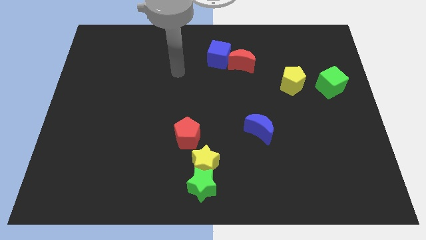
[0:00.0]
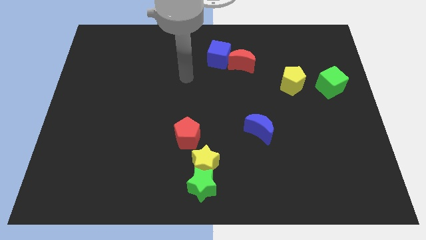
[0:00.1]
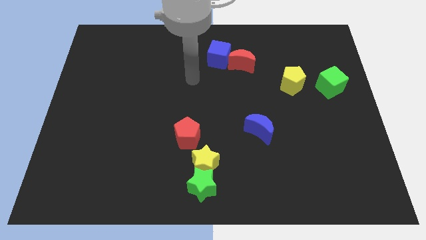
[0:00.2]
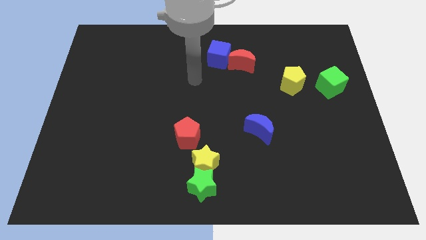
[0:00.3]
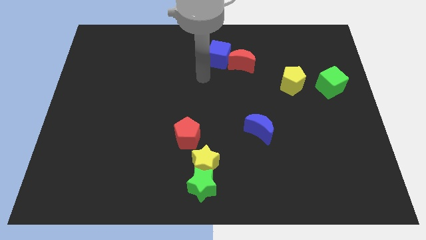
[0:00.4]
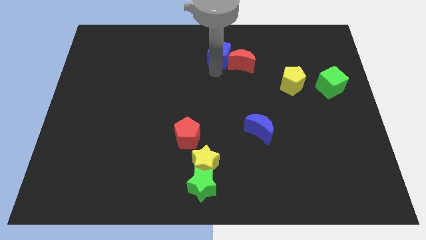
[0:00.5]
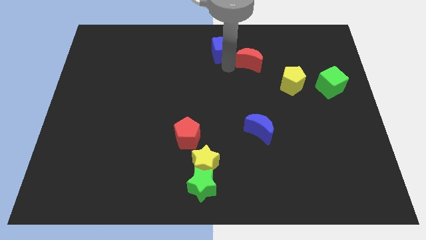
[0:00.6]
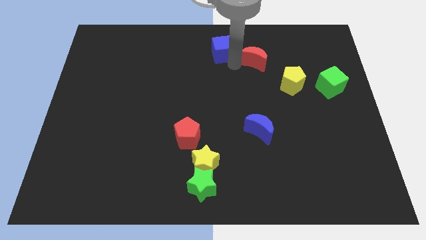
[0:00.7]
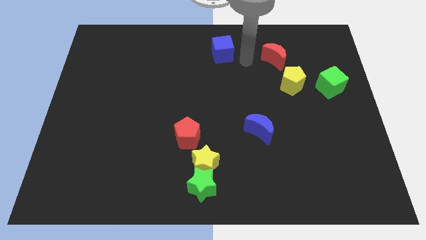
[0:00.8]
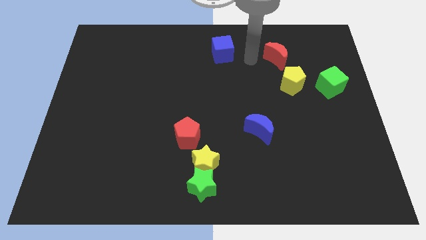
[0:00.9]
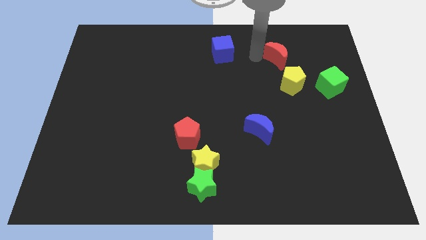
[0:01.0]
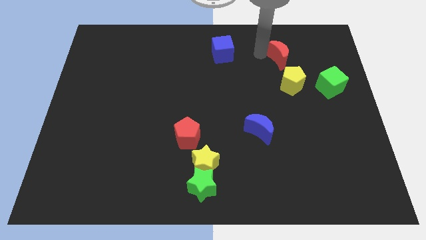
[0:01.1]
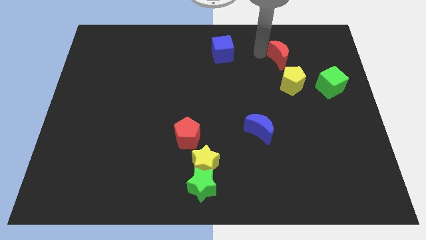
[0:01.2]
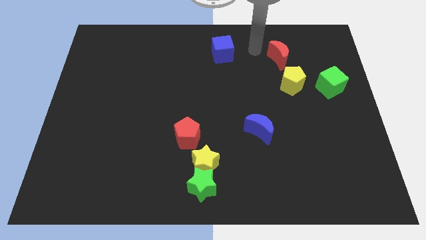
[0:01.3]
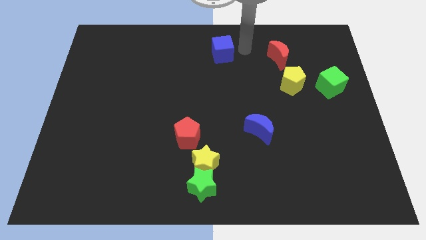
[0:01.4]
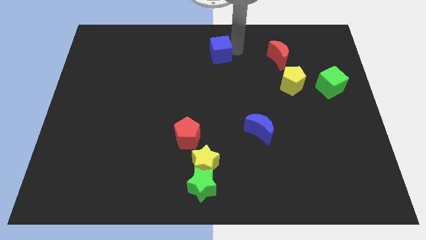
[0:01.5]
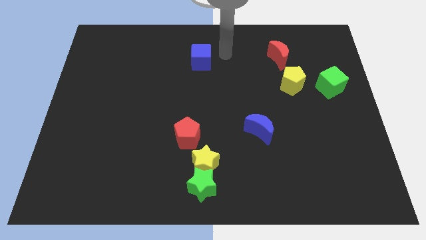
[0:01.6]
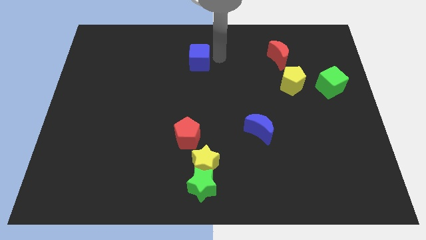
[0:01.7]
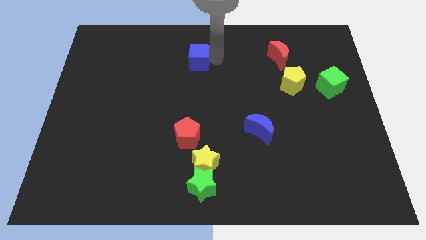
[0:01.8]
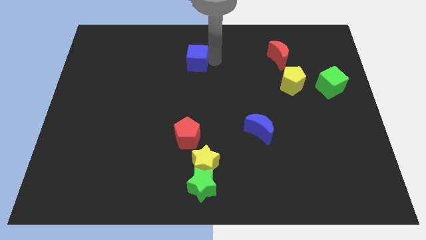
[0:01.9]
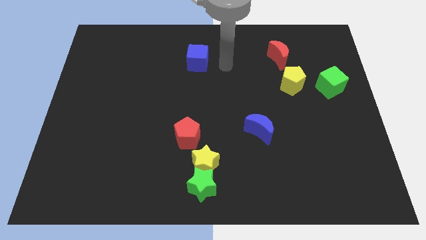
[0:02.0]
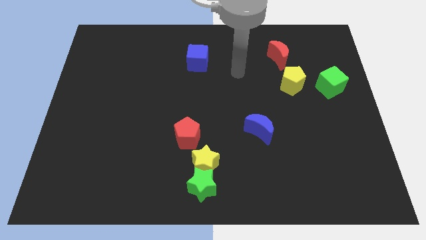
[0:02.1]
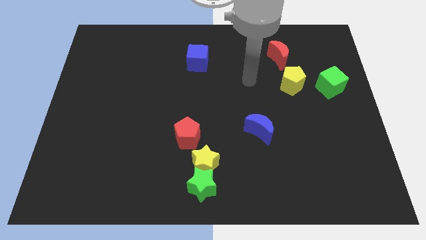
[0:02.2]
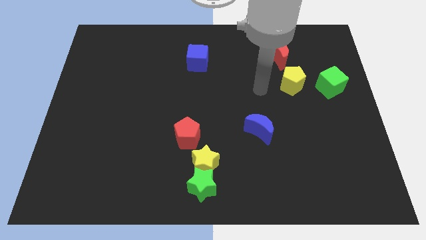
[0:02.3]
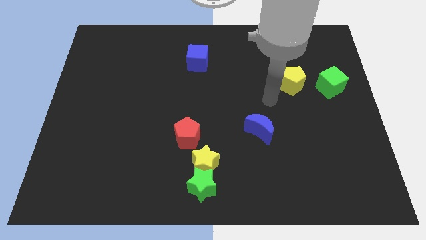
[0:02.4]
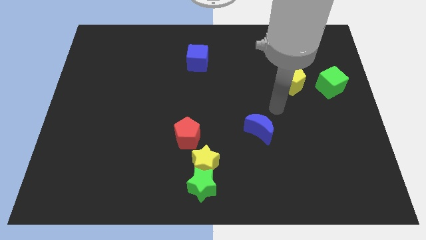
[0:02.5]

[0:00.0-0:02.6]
push blue cube above red pentagon

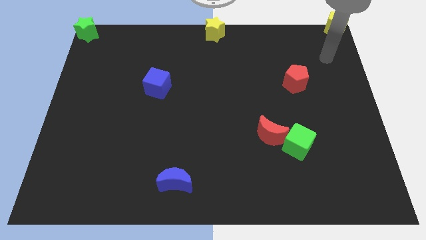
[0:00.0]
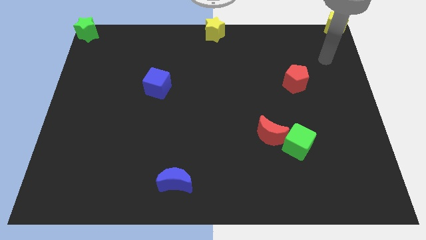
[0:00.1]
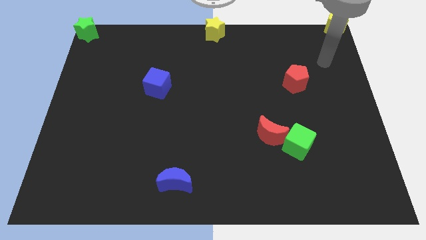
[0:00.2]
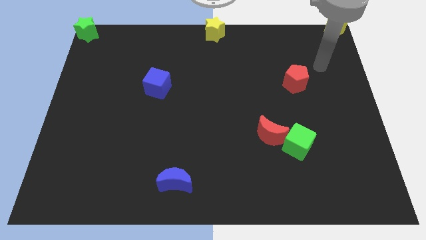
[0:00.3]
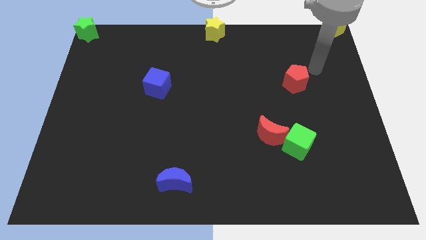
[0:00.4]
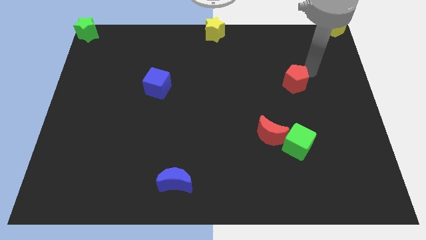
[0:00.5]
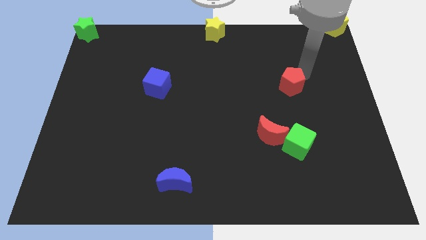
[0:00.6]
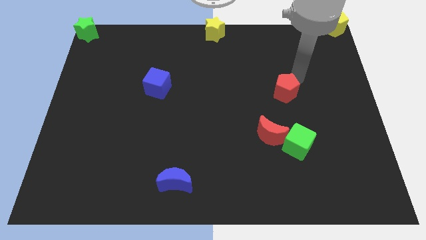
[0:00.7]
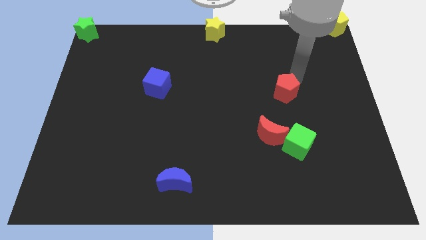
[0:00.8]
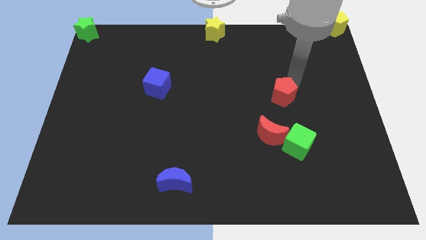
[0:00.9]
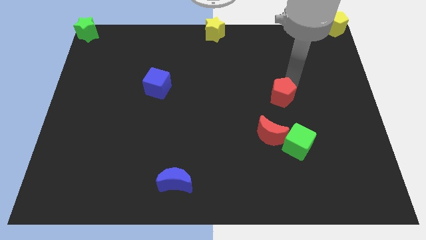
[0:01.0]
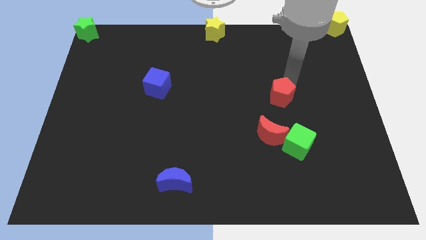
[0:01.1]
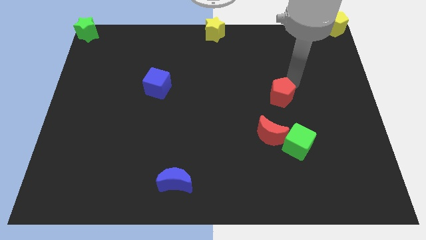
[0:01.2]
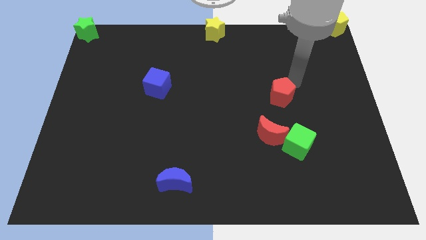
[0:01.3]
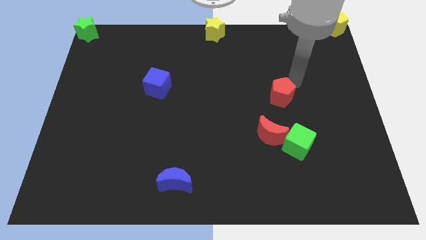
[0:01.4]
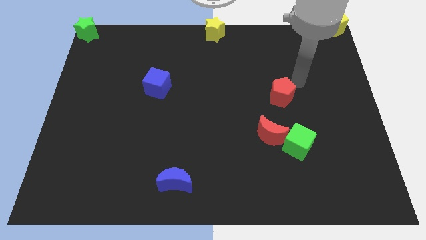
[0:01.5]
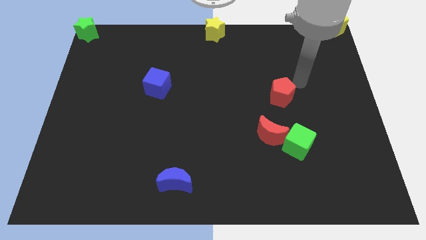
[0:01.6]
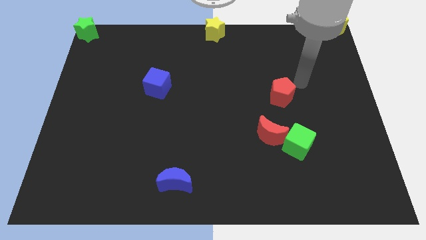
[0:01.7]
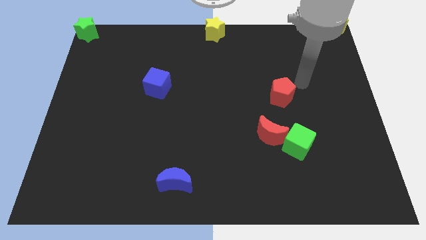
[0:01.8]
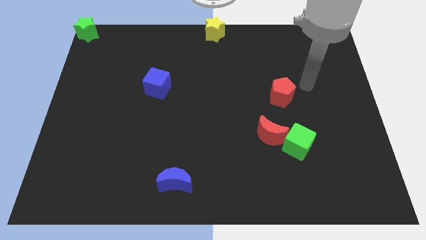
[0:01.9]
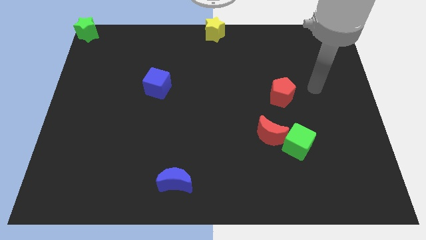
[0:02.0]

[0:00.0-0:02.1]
push the red pentagon diagonal above red moon

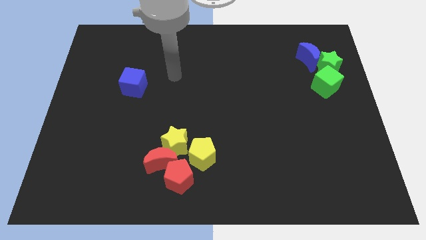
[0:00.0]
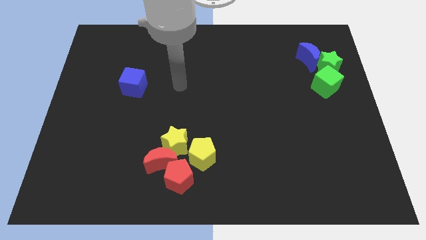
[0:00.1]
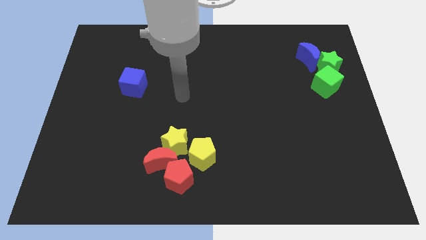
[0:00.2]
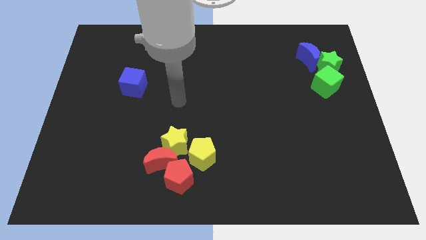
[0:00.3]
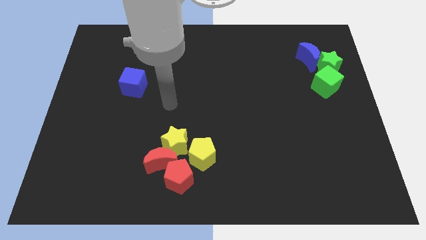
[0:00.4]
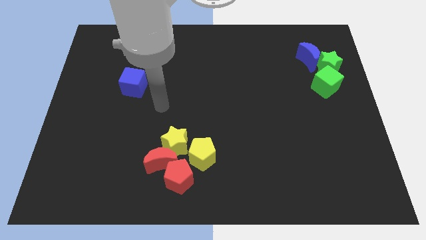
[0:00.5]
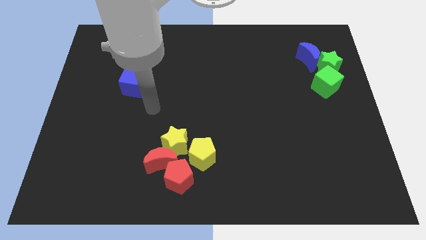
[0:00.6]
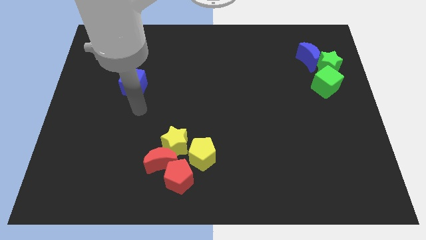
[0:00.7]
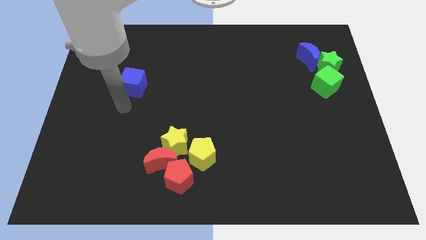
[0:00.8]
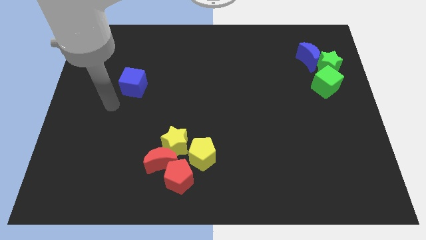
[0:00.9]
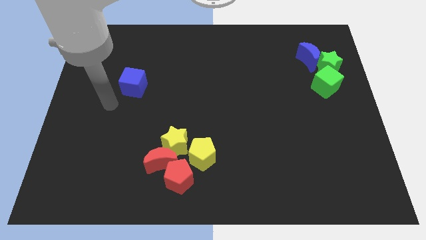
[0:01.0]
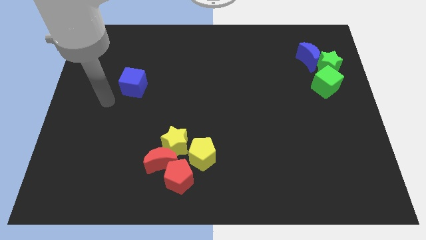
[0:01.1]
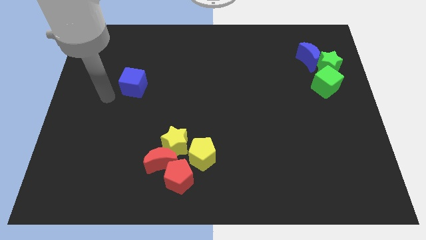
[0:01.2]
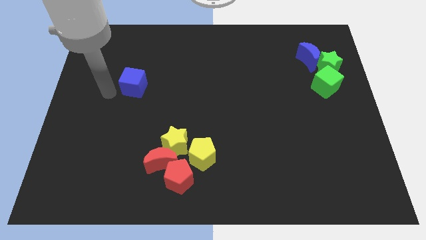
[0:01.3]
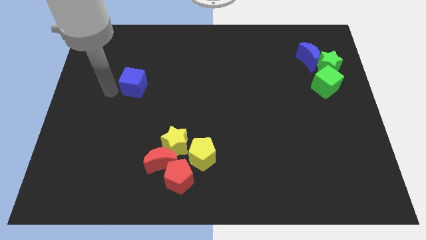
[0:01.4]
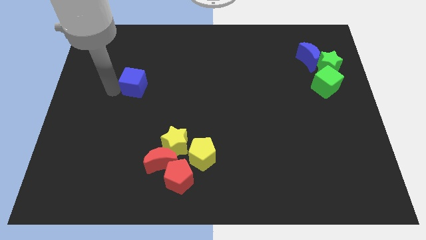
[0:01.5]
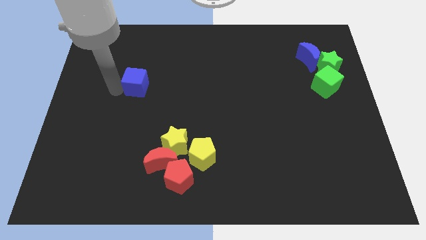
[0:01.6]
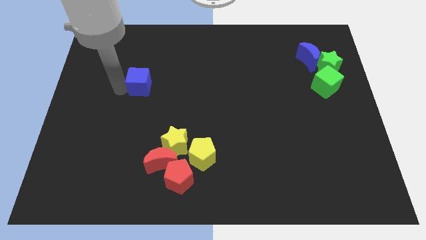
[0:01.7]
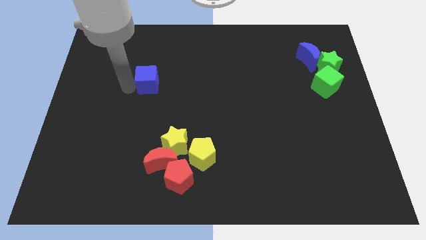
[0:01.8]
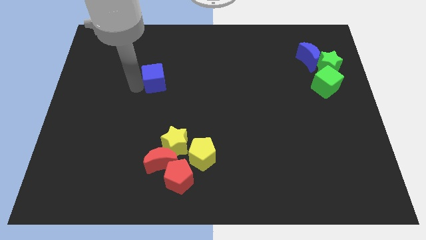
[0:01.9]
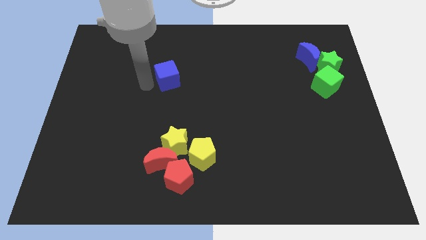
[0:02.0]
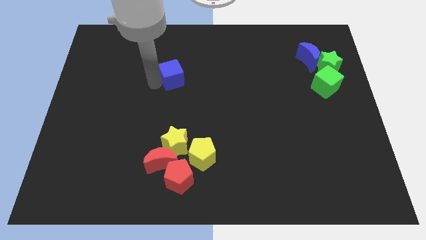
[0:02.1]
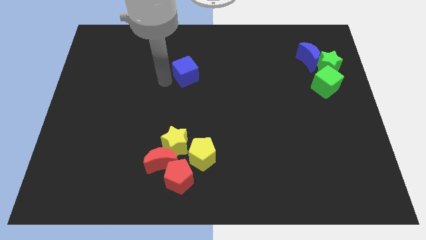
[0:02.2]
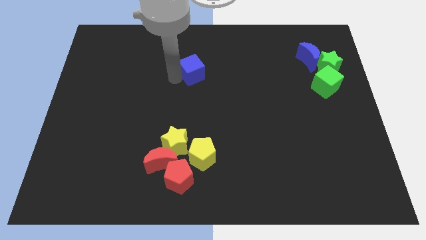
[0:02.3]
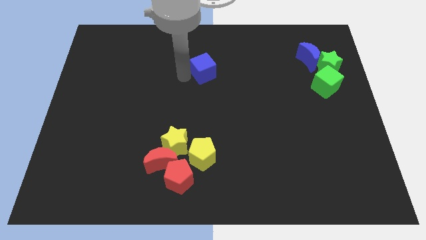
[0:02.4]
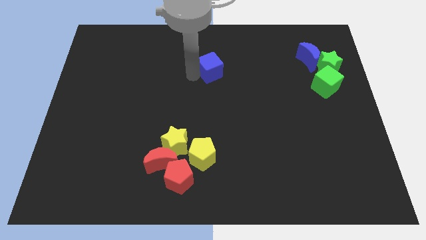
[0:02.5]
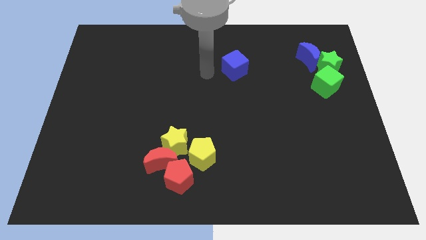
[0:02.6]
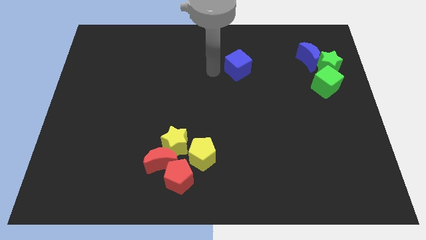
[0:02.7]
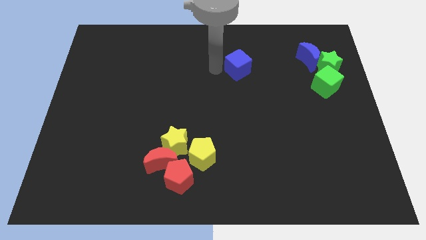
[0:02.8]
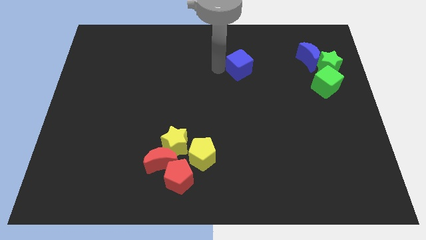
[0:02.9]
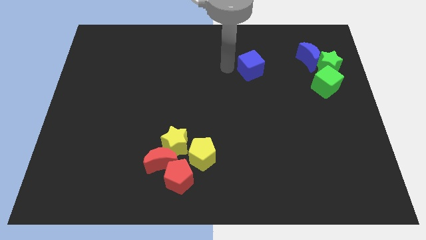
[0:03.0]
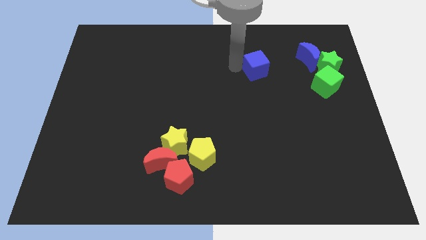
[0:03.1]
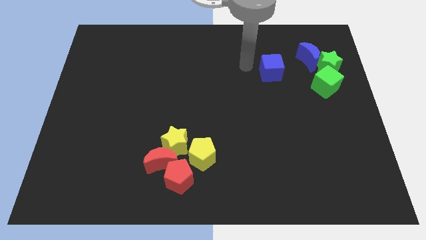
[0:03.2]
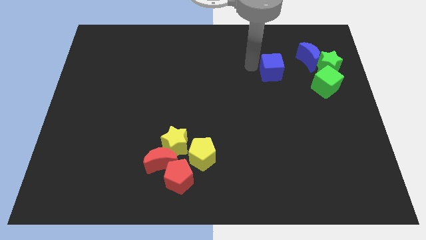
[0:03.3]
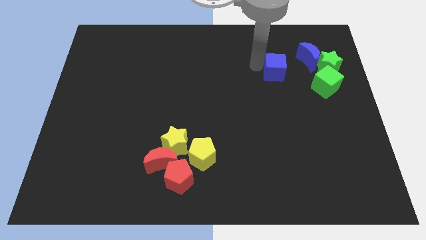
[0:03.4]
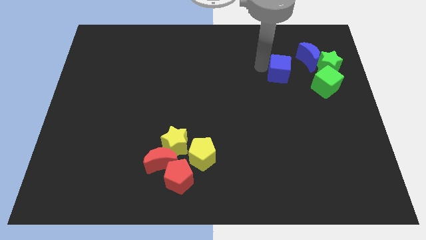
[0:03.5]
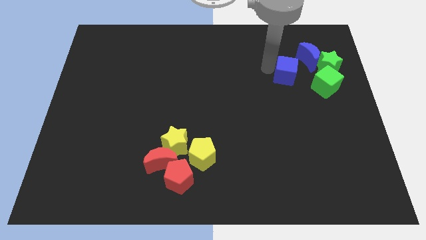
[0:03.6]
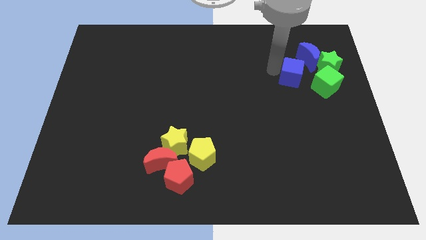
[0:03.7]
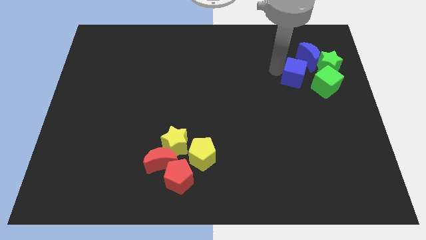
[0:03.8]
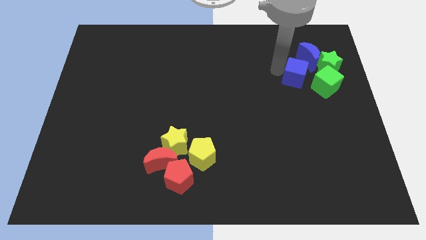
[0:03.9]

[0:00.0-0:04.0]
move blue cube to the left of green star

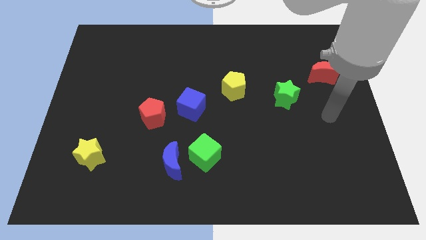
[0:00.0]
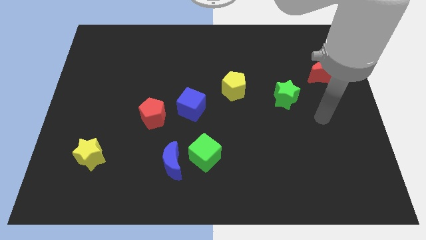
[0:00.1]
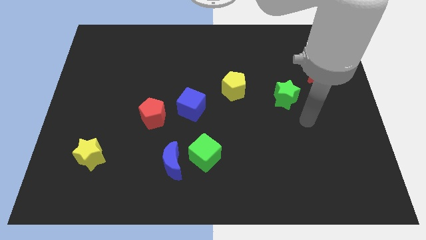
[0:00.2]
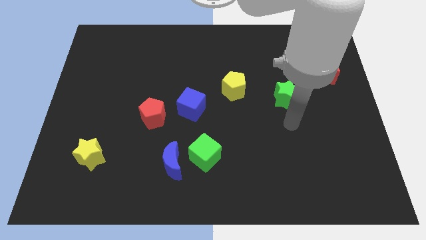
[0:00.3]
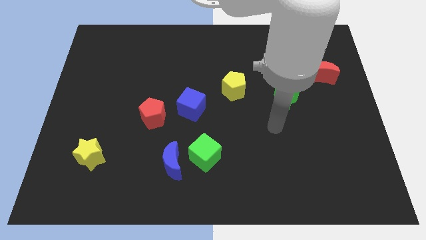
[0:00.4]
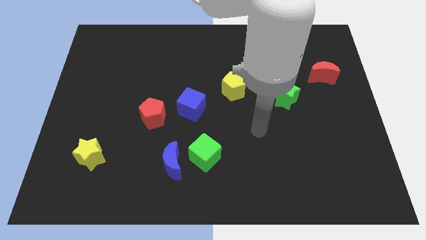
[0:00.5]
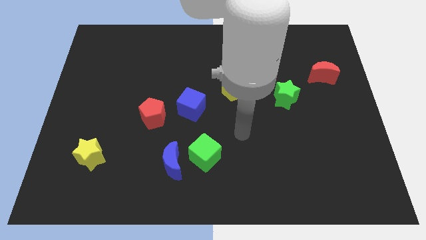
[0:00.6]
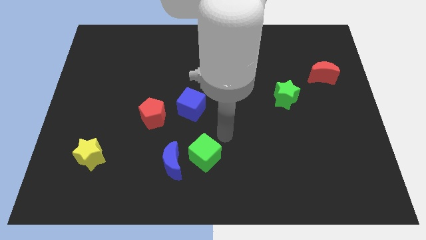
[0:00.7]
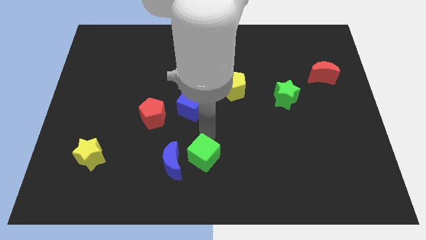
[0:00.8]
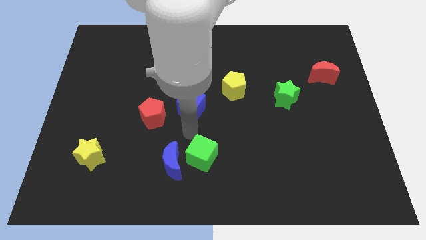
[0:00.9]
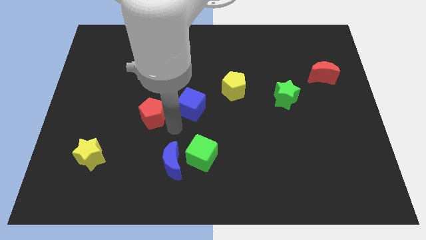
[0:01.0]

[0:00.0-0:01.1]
touch the green cube at the top
